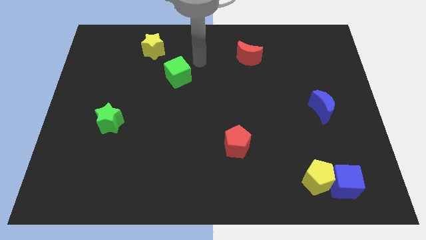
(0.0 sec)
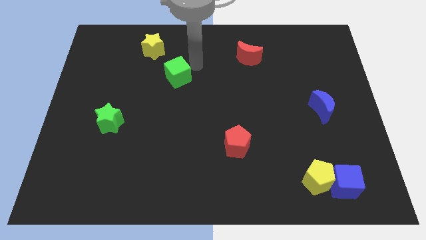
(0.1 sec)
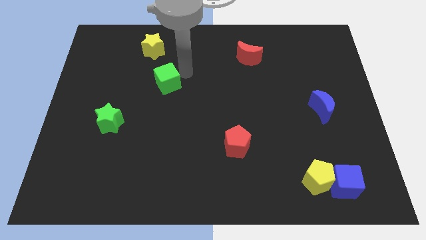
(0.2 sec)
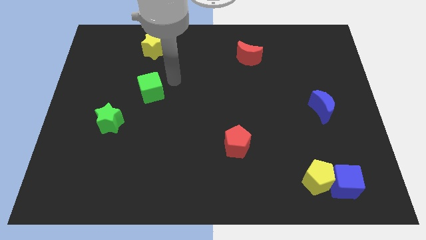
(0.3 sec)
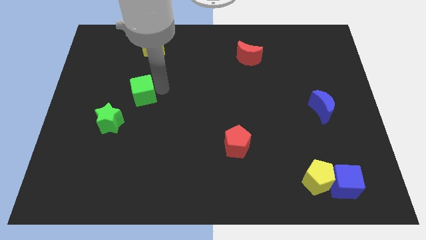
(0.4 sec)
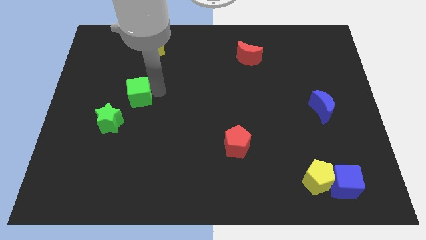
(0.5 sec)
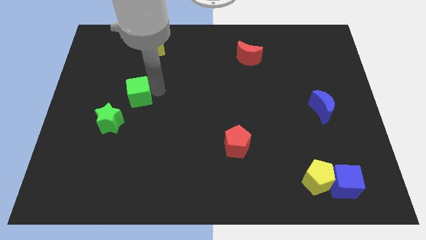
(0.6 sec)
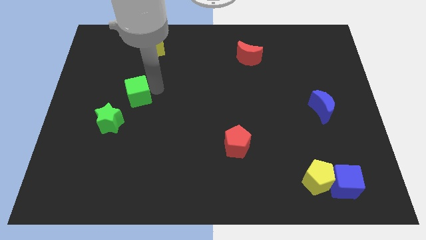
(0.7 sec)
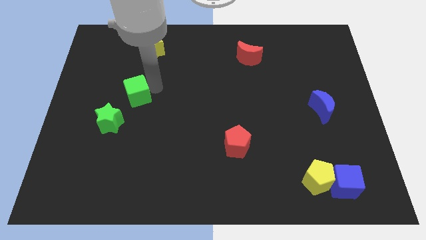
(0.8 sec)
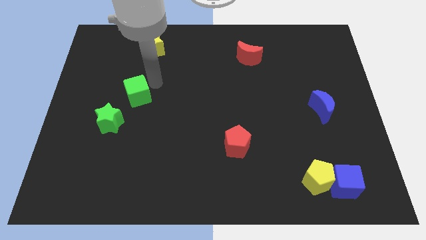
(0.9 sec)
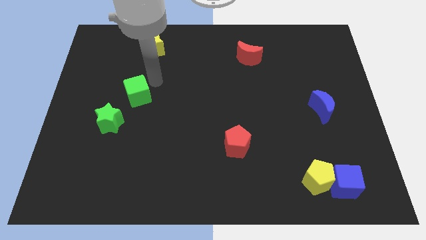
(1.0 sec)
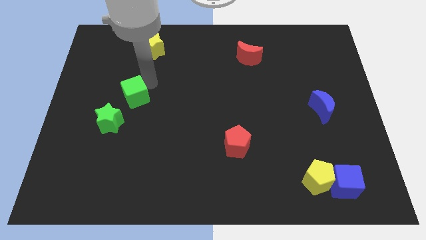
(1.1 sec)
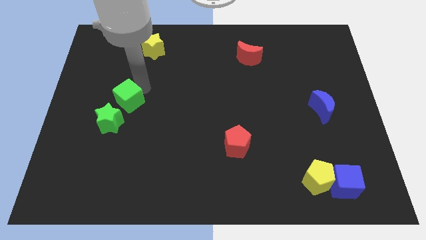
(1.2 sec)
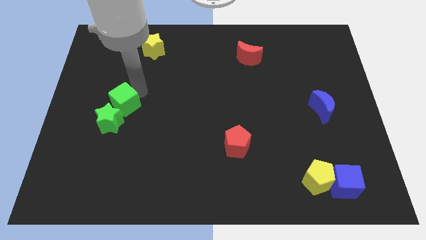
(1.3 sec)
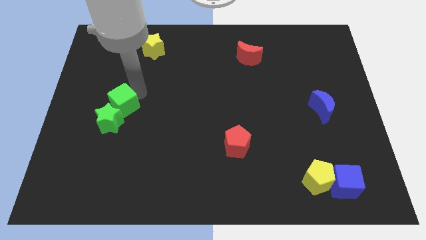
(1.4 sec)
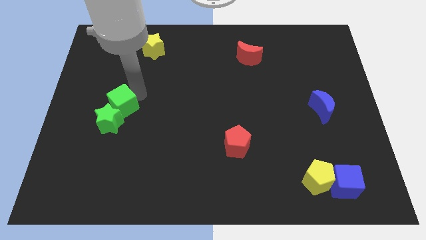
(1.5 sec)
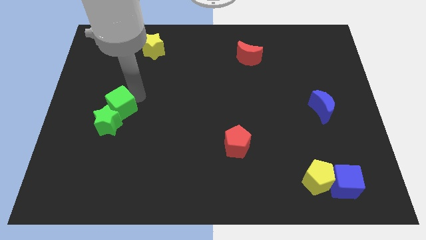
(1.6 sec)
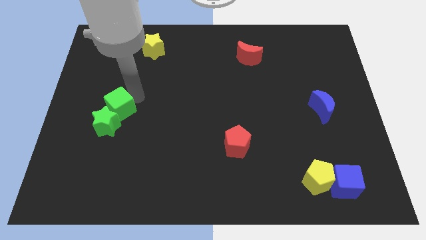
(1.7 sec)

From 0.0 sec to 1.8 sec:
push the green cube into the green star

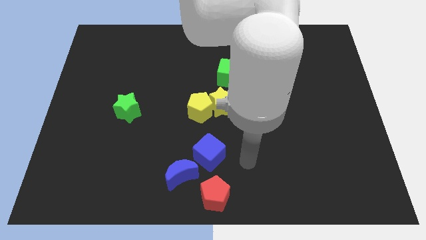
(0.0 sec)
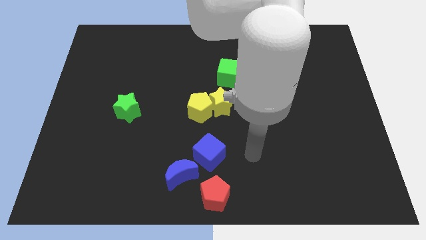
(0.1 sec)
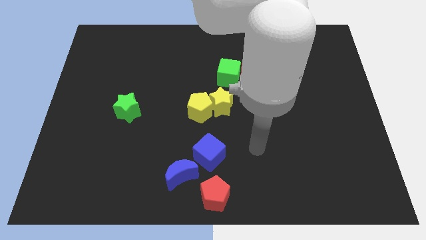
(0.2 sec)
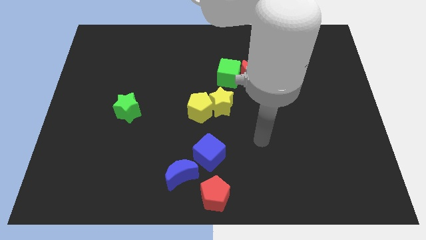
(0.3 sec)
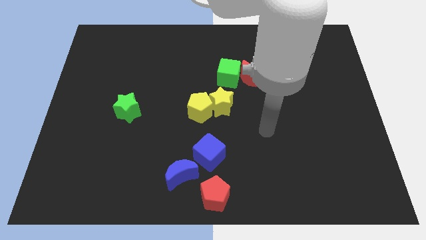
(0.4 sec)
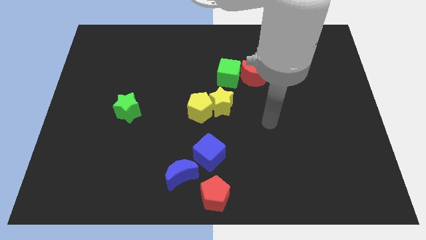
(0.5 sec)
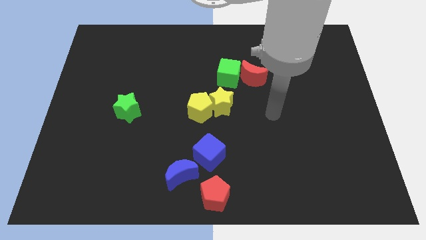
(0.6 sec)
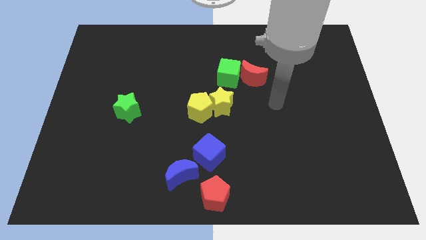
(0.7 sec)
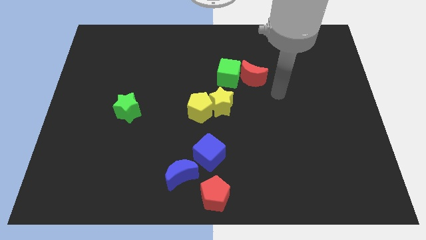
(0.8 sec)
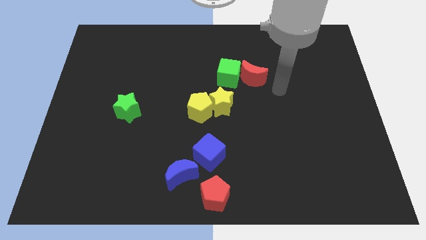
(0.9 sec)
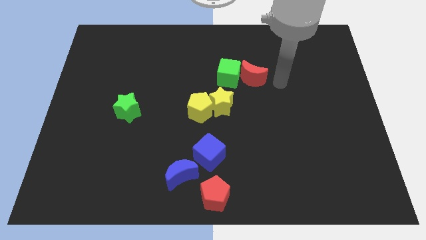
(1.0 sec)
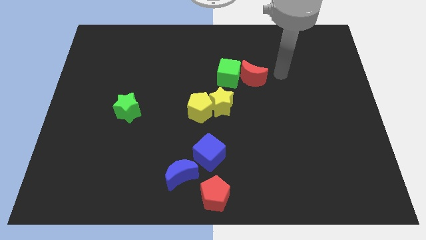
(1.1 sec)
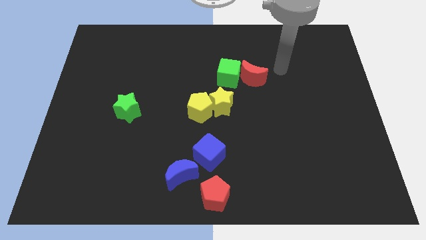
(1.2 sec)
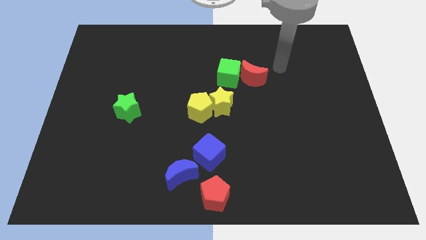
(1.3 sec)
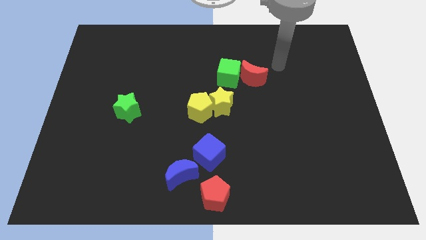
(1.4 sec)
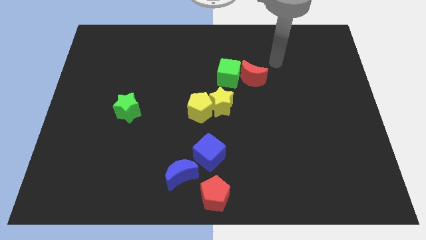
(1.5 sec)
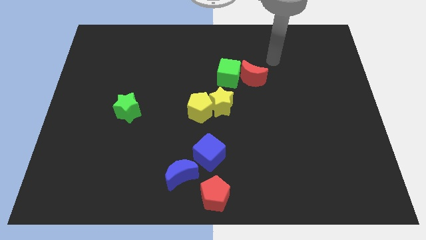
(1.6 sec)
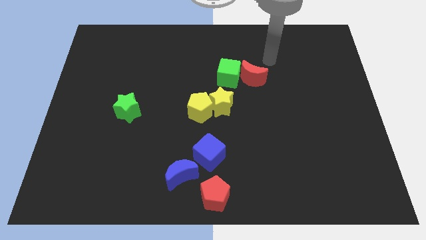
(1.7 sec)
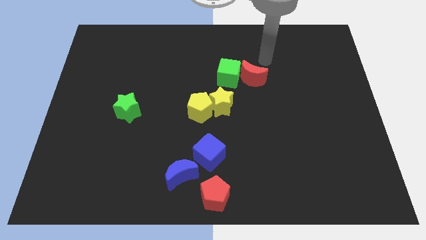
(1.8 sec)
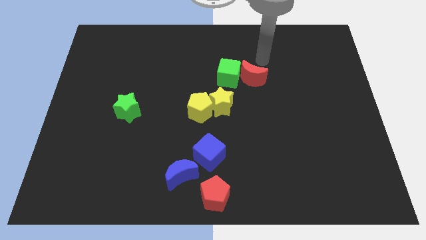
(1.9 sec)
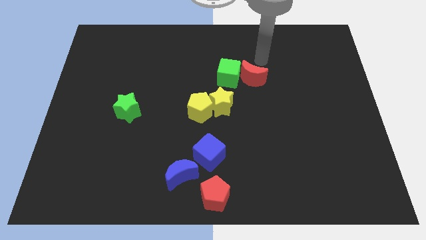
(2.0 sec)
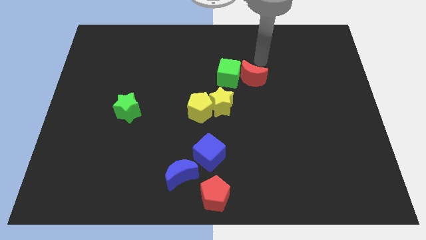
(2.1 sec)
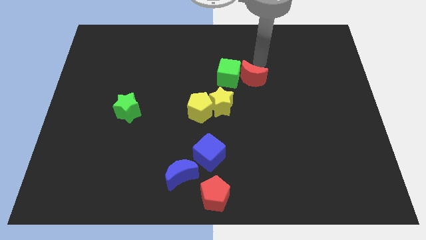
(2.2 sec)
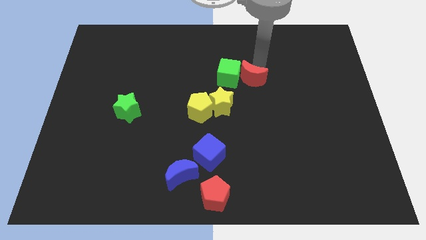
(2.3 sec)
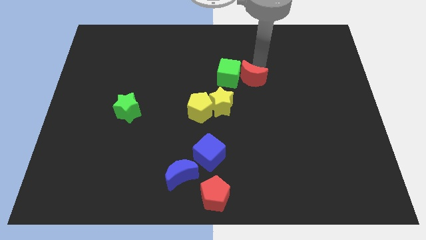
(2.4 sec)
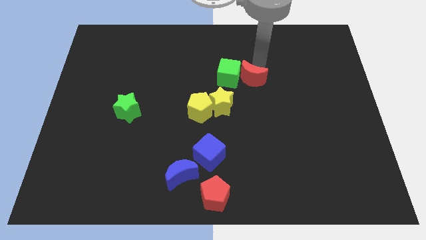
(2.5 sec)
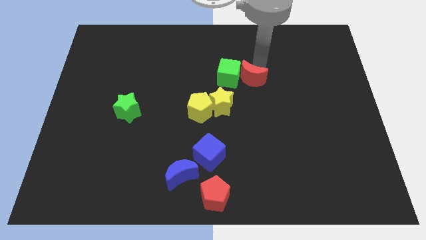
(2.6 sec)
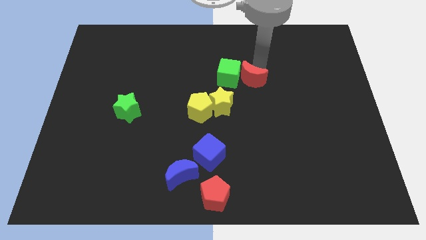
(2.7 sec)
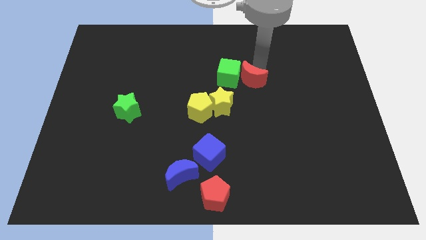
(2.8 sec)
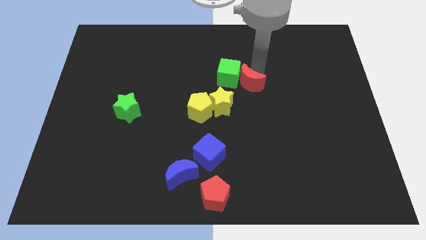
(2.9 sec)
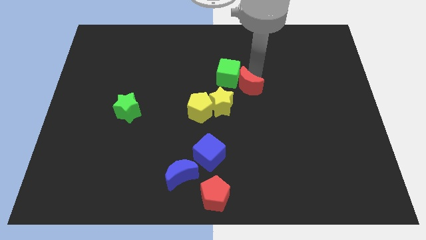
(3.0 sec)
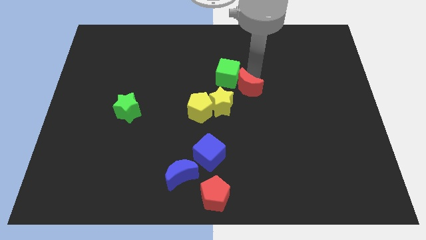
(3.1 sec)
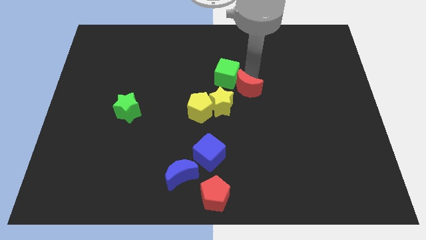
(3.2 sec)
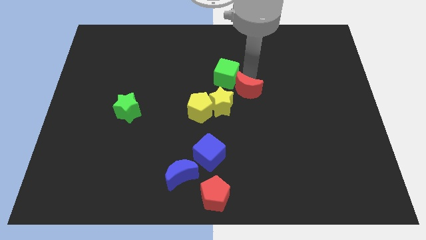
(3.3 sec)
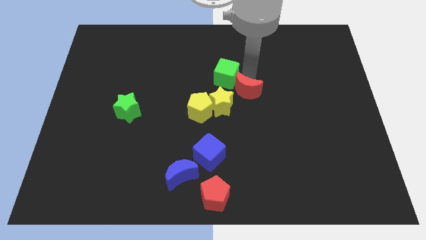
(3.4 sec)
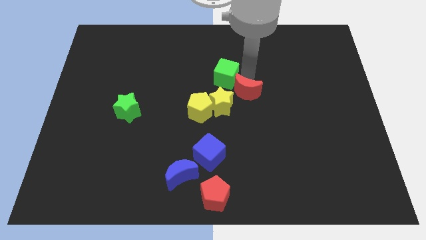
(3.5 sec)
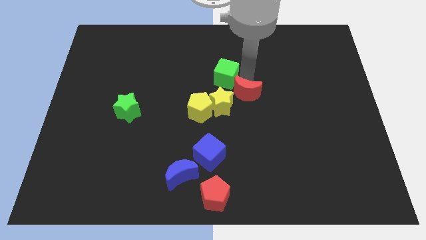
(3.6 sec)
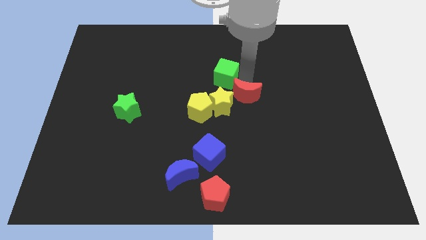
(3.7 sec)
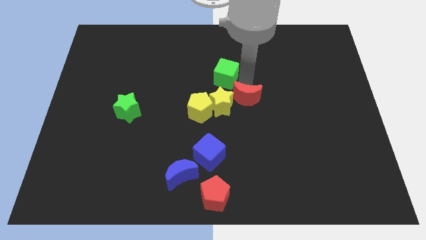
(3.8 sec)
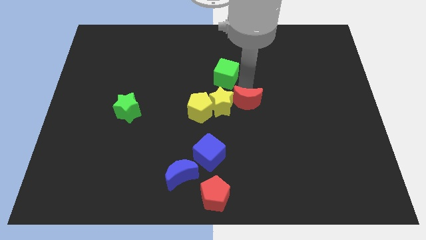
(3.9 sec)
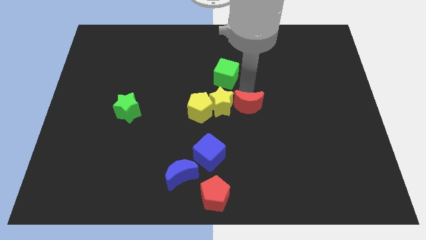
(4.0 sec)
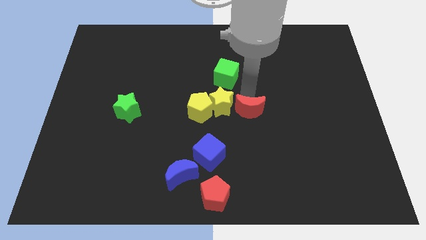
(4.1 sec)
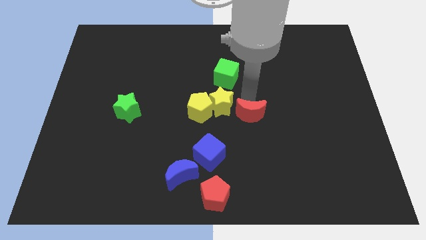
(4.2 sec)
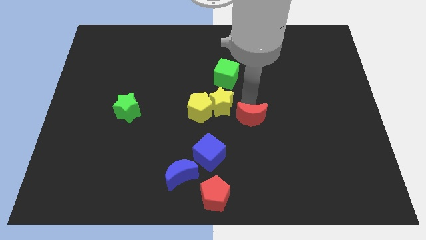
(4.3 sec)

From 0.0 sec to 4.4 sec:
move the red crescent to the right of the yellow star

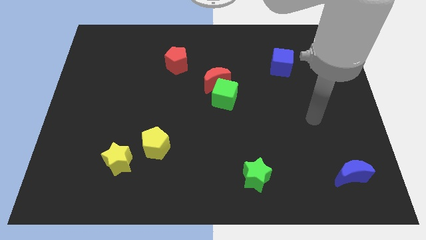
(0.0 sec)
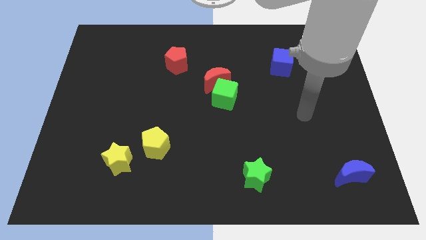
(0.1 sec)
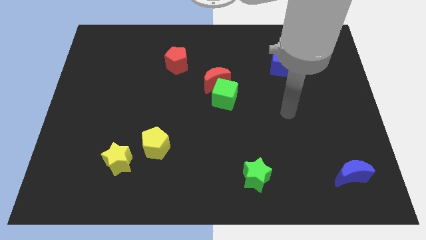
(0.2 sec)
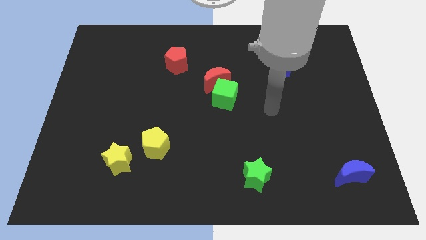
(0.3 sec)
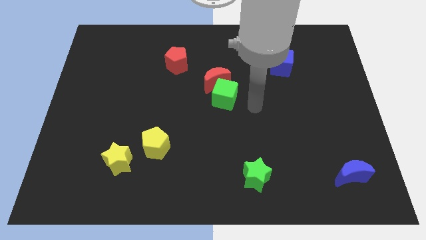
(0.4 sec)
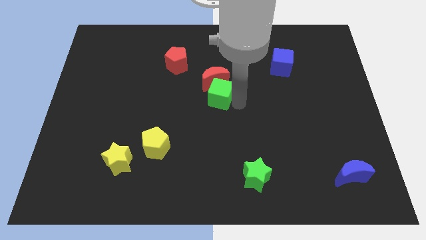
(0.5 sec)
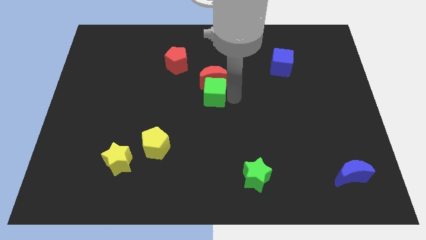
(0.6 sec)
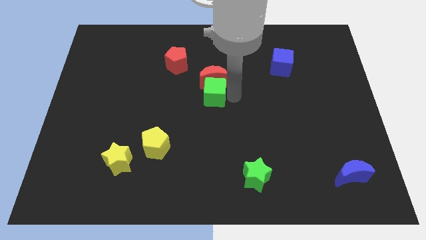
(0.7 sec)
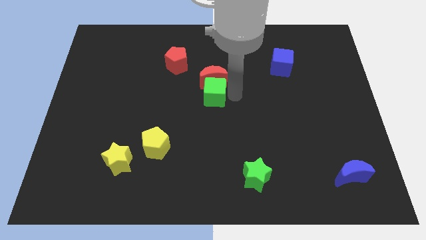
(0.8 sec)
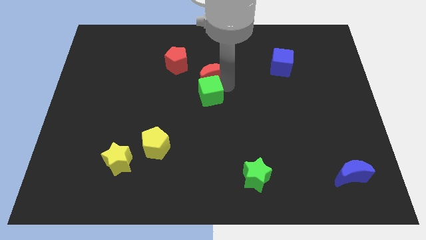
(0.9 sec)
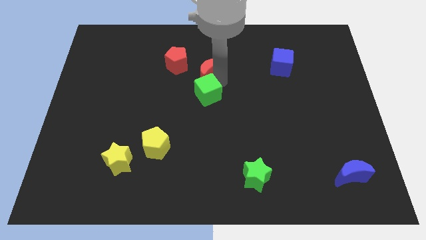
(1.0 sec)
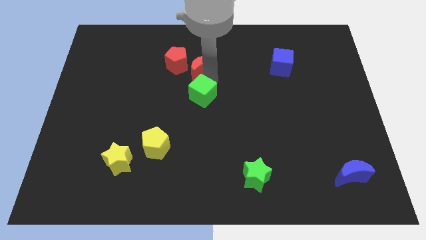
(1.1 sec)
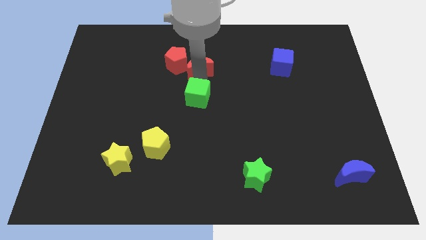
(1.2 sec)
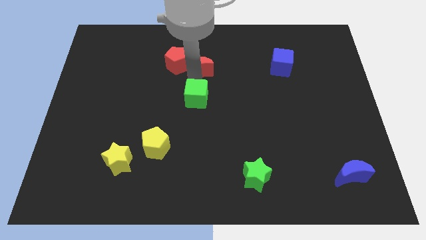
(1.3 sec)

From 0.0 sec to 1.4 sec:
separate the red crescent and green cube at the center

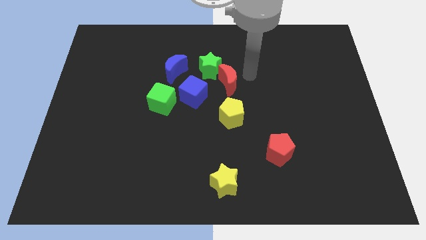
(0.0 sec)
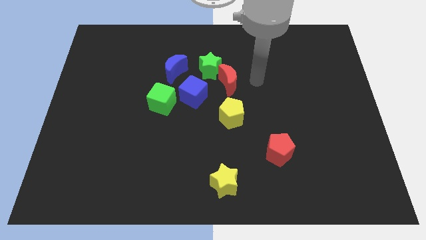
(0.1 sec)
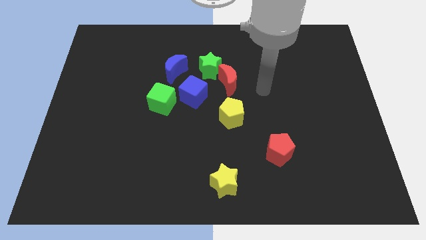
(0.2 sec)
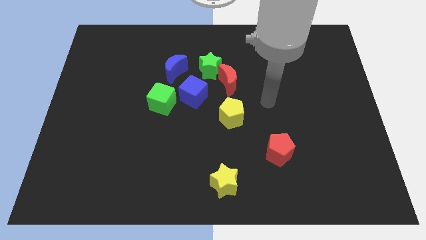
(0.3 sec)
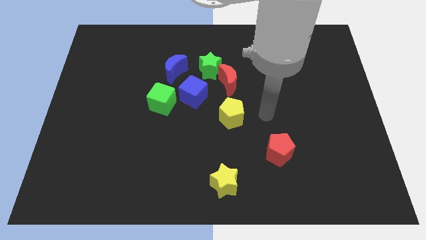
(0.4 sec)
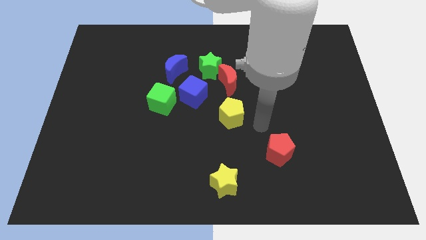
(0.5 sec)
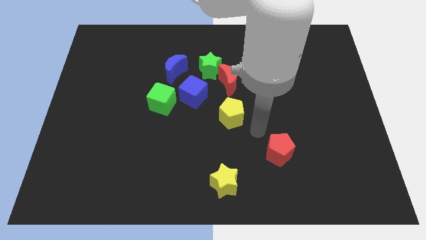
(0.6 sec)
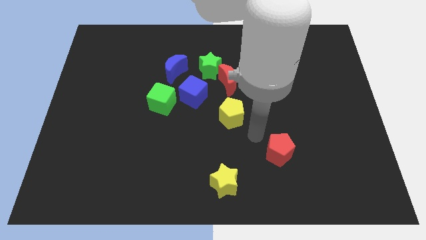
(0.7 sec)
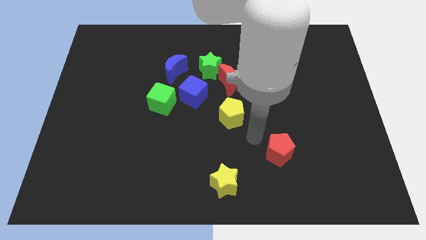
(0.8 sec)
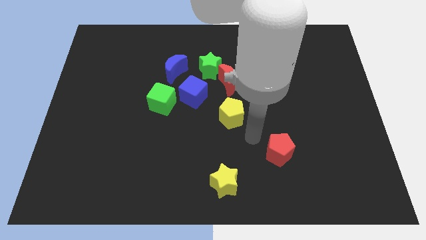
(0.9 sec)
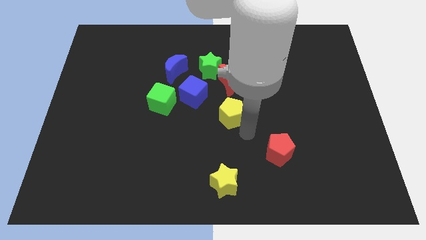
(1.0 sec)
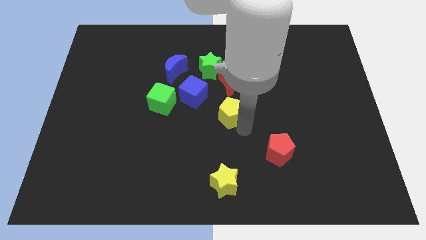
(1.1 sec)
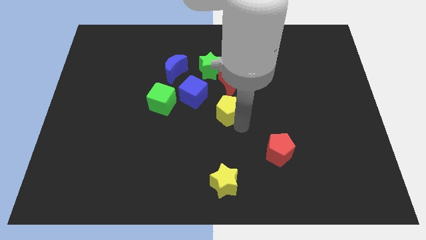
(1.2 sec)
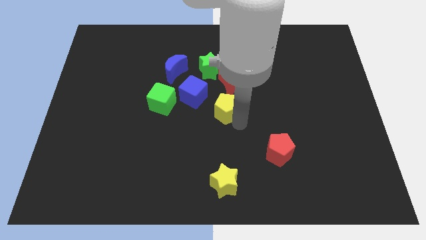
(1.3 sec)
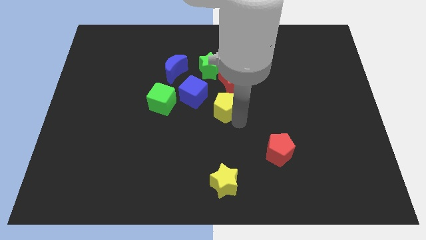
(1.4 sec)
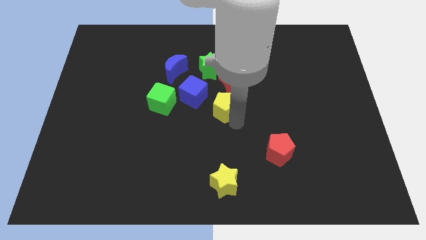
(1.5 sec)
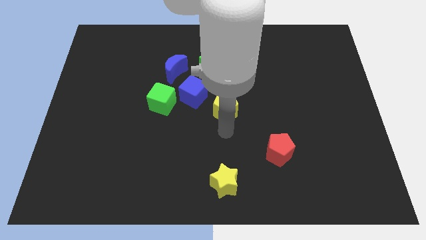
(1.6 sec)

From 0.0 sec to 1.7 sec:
move the yellow pentagon slightly to the top
